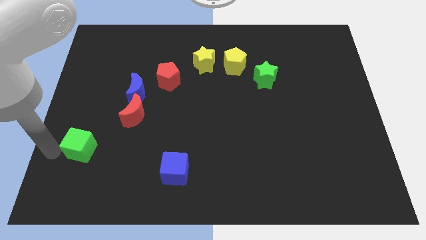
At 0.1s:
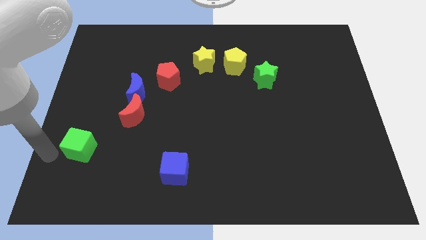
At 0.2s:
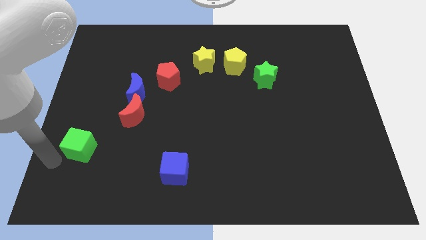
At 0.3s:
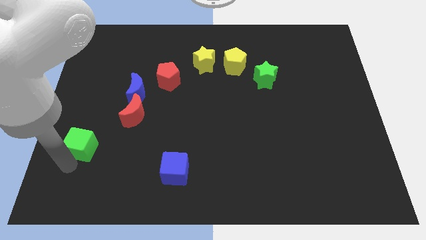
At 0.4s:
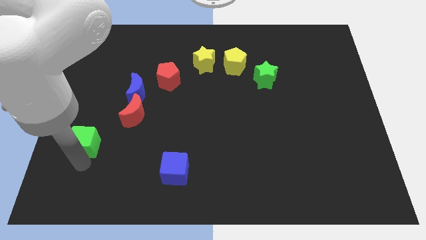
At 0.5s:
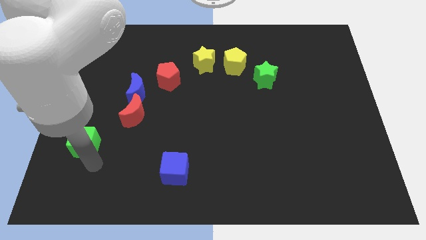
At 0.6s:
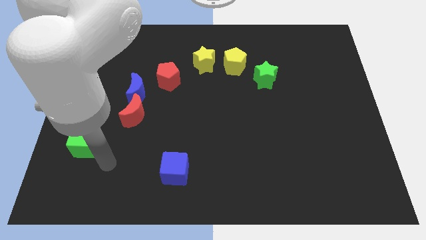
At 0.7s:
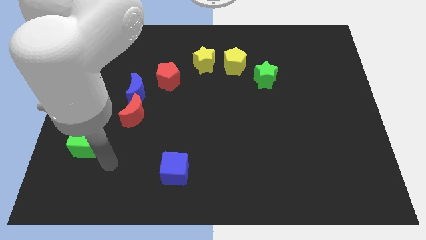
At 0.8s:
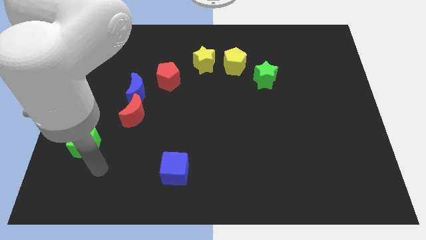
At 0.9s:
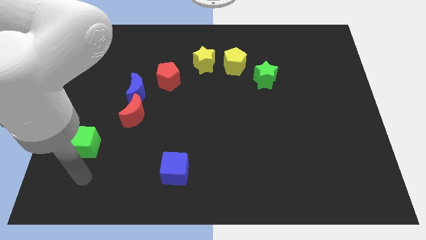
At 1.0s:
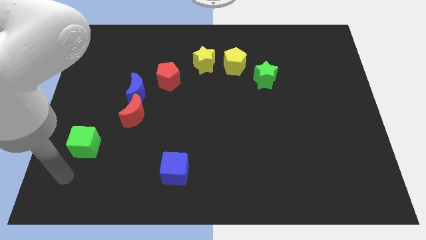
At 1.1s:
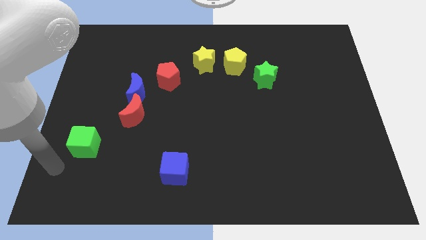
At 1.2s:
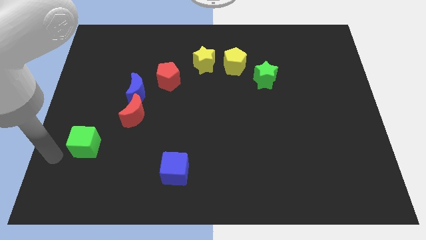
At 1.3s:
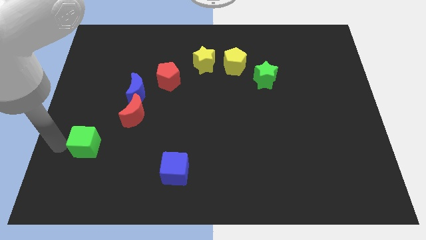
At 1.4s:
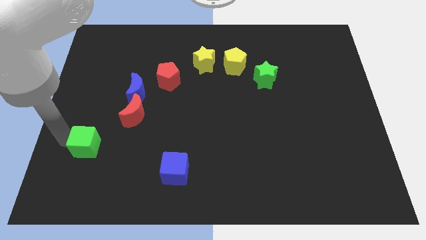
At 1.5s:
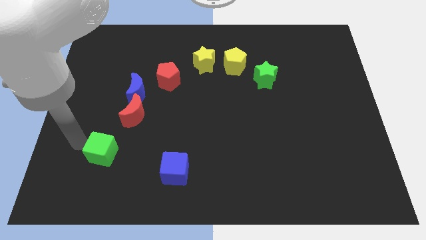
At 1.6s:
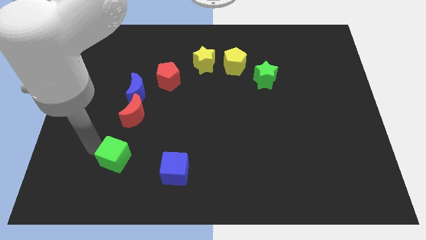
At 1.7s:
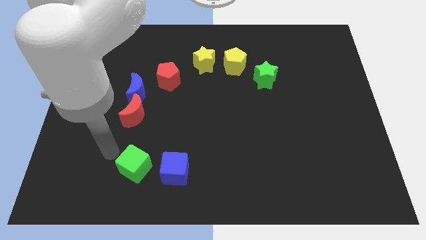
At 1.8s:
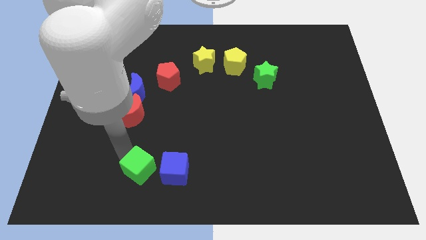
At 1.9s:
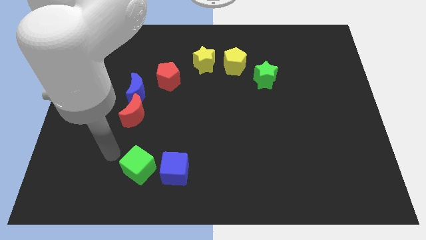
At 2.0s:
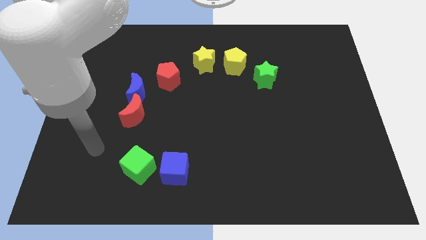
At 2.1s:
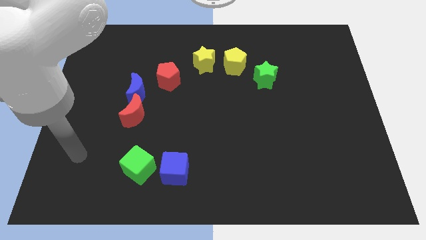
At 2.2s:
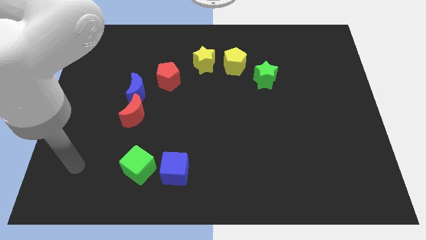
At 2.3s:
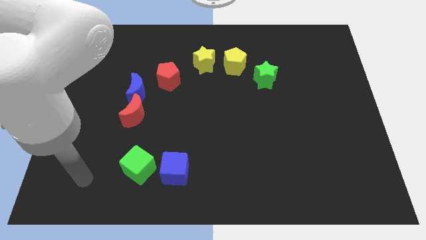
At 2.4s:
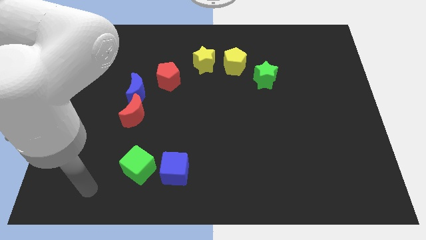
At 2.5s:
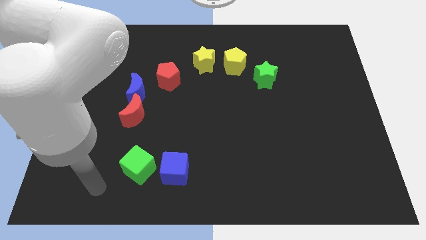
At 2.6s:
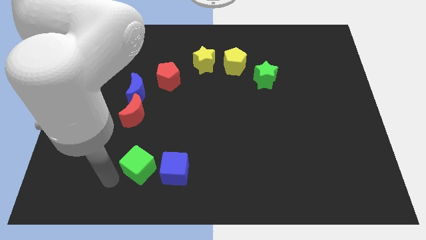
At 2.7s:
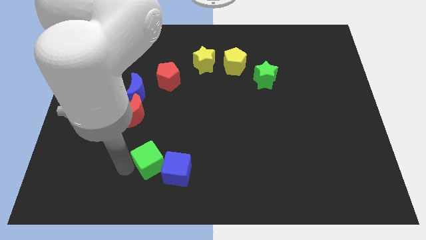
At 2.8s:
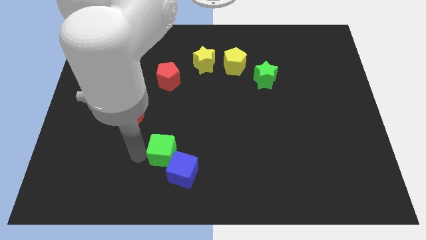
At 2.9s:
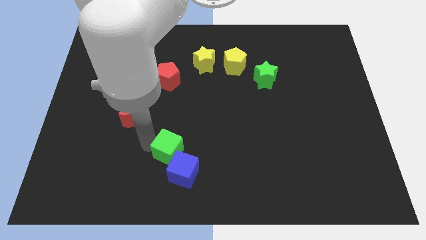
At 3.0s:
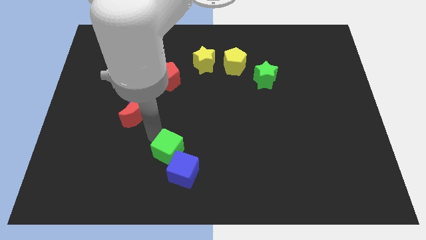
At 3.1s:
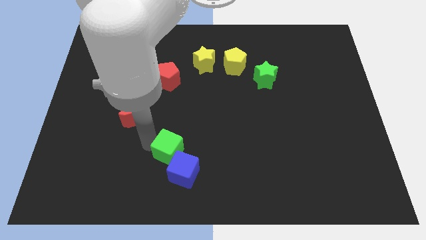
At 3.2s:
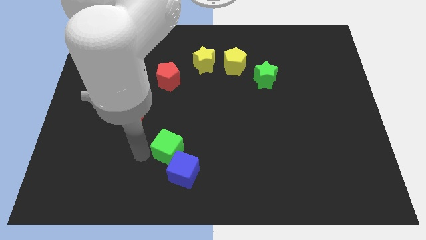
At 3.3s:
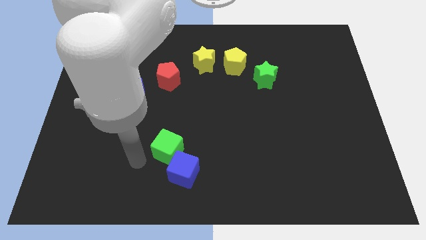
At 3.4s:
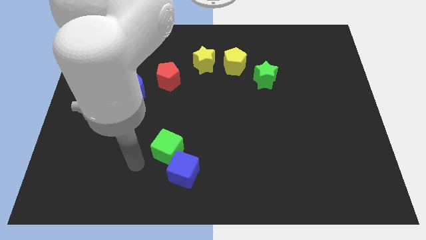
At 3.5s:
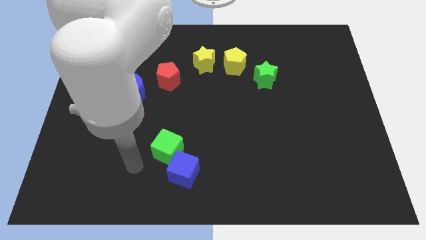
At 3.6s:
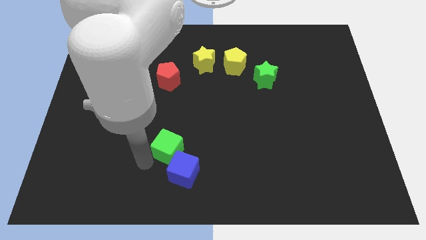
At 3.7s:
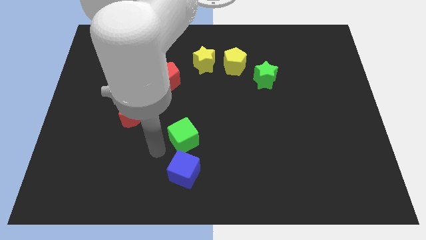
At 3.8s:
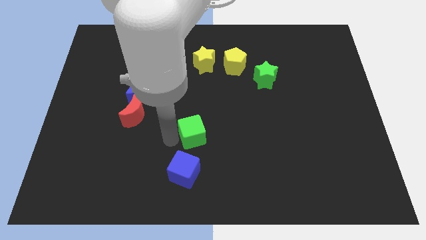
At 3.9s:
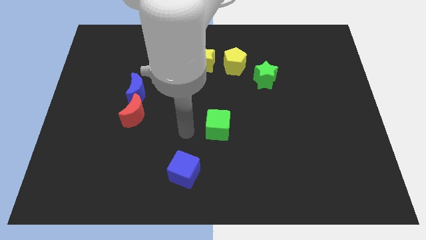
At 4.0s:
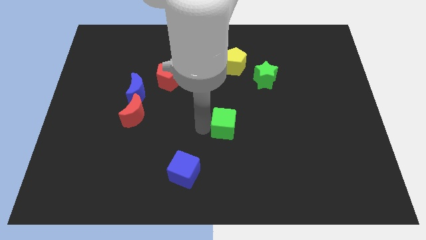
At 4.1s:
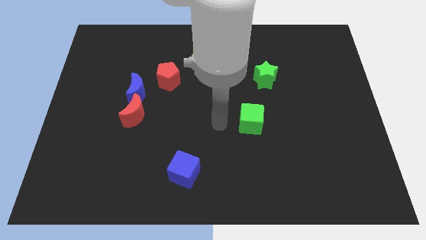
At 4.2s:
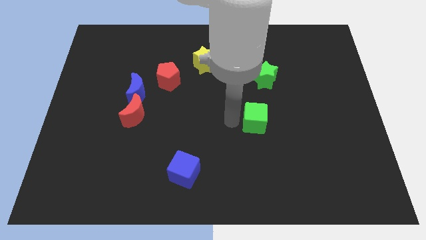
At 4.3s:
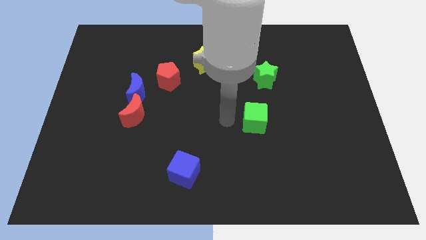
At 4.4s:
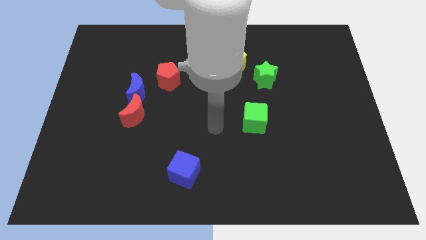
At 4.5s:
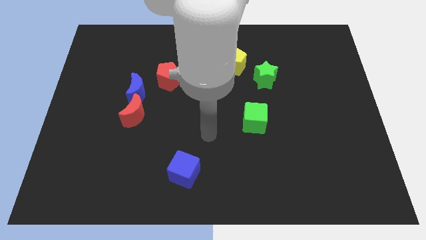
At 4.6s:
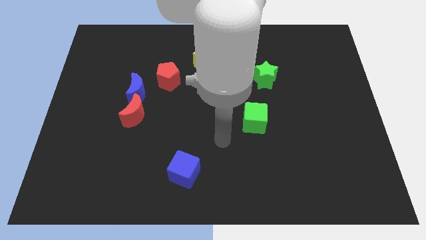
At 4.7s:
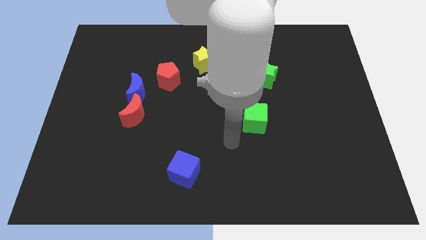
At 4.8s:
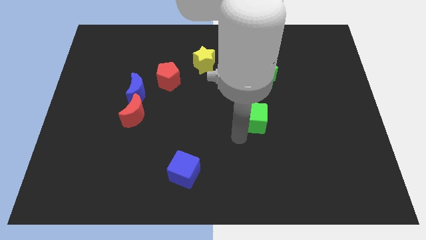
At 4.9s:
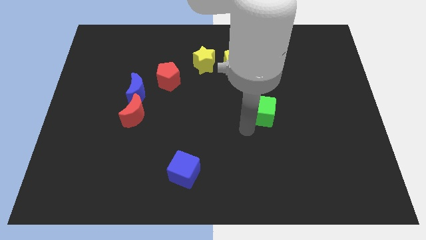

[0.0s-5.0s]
place green cube to the bottom of green star

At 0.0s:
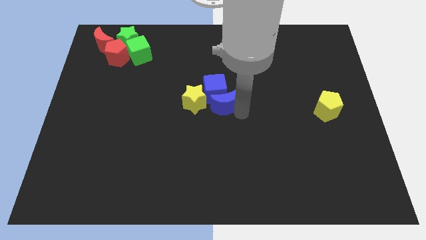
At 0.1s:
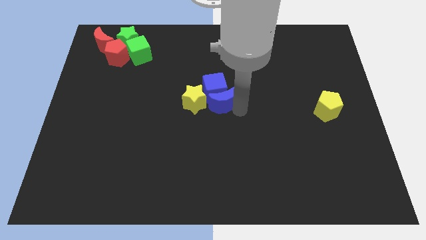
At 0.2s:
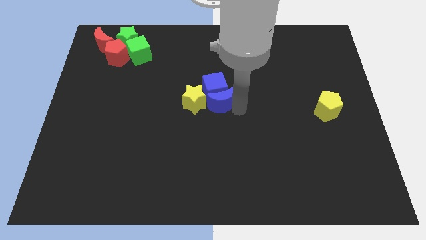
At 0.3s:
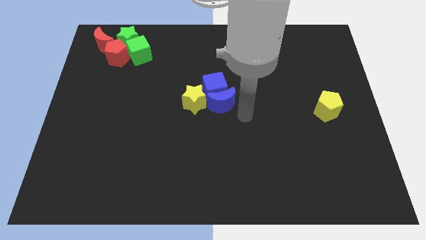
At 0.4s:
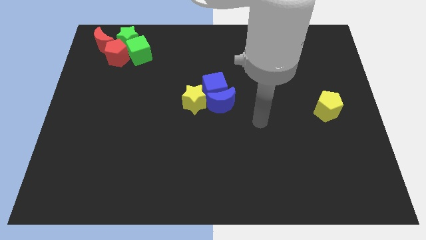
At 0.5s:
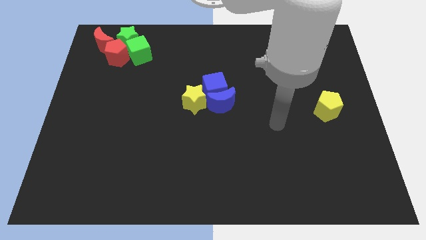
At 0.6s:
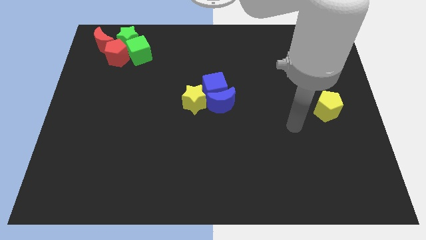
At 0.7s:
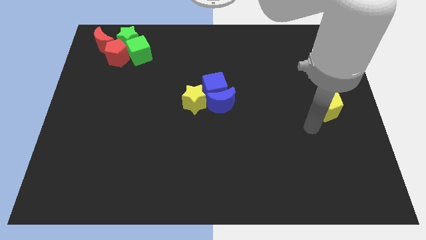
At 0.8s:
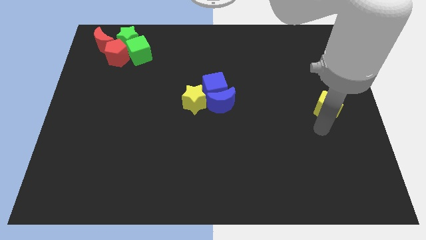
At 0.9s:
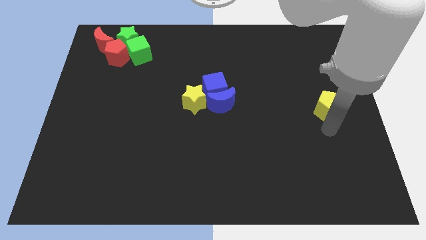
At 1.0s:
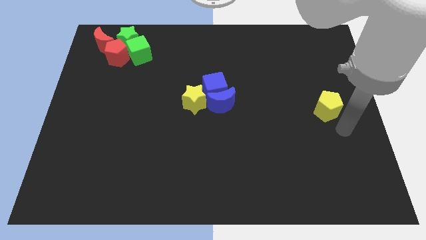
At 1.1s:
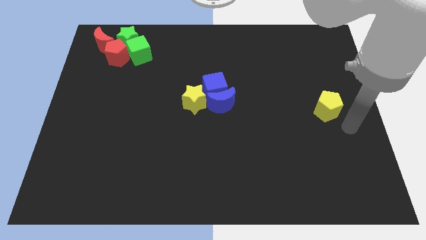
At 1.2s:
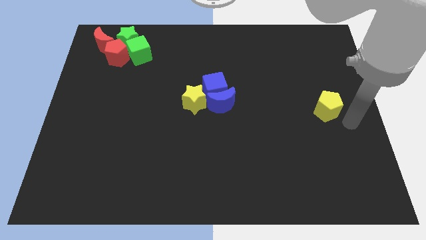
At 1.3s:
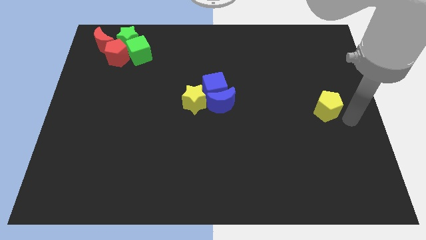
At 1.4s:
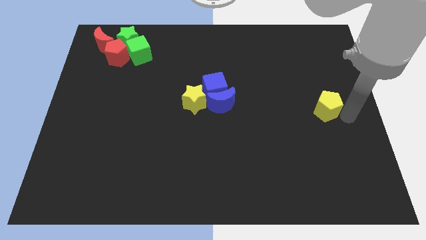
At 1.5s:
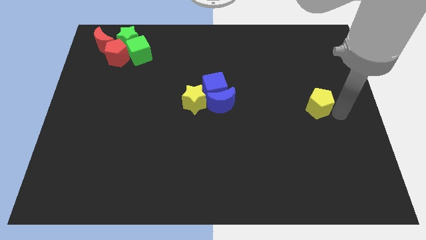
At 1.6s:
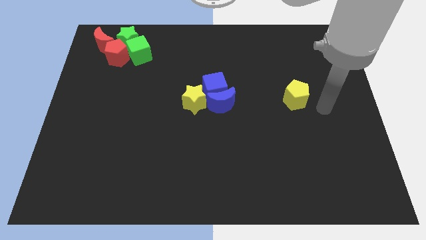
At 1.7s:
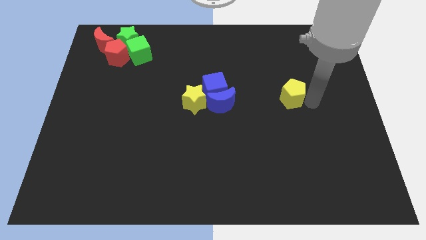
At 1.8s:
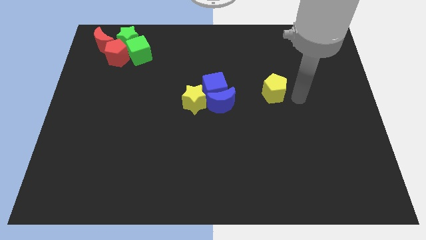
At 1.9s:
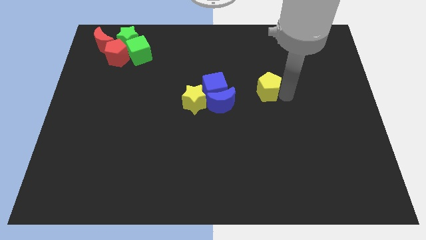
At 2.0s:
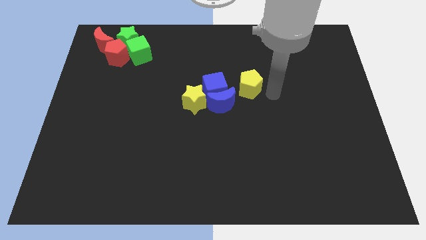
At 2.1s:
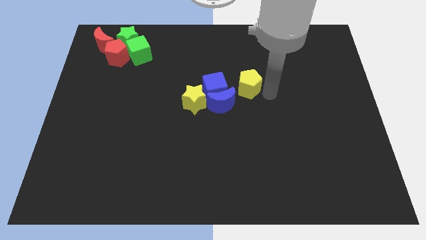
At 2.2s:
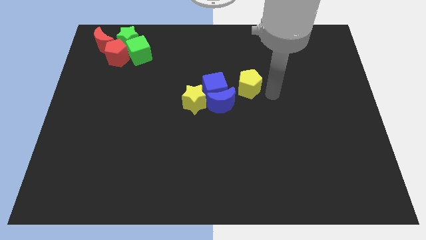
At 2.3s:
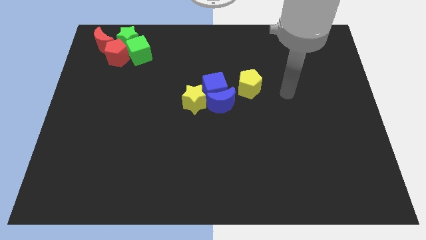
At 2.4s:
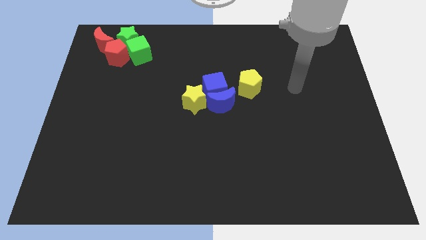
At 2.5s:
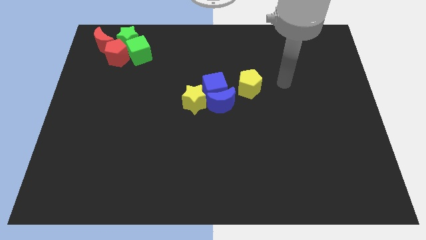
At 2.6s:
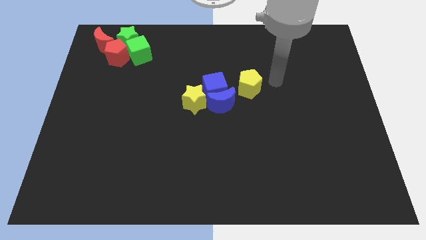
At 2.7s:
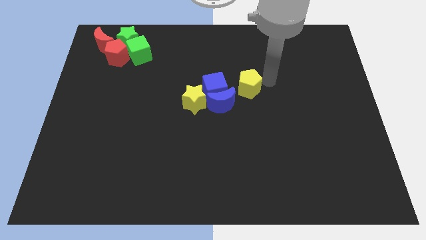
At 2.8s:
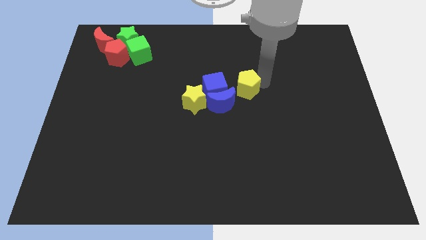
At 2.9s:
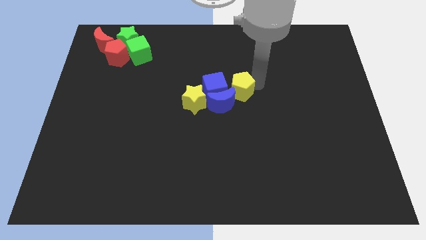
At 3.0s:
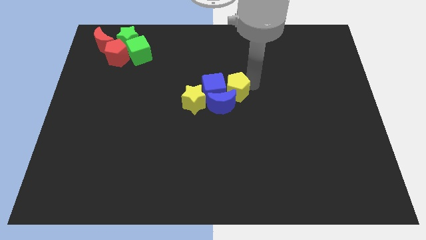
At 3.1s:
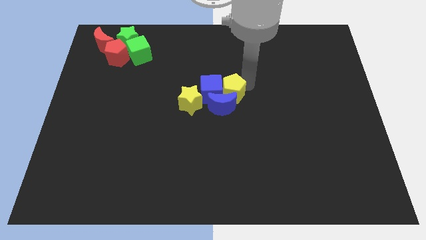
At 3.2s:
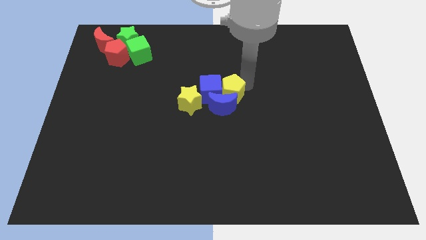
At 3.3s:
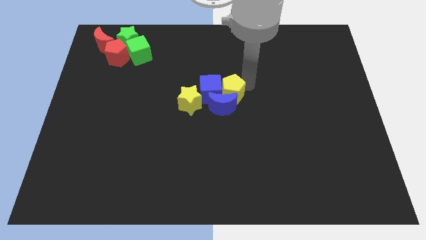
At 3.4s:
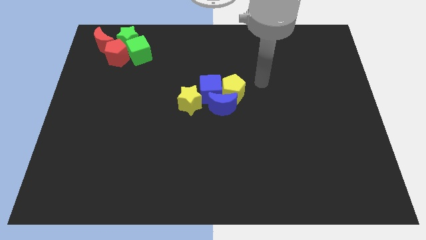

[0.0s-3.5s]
push the yellow pentagon into a group of blocks at centre of the board

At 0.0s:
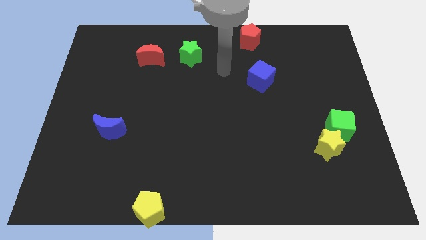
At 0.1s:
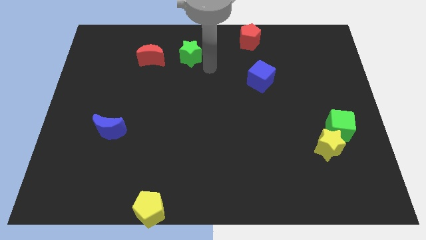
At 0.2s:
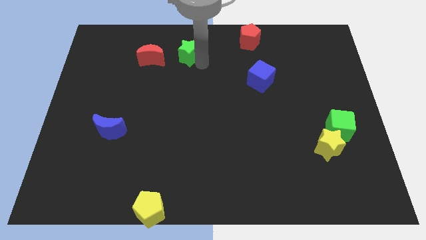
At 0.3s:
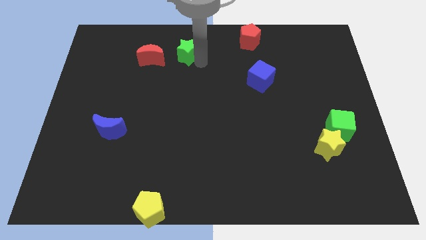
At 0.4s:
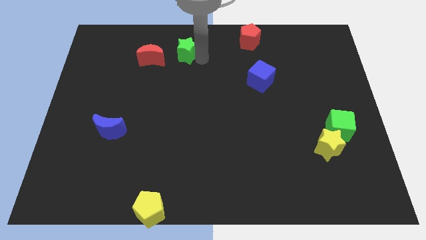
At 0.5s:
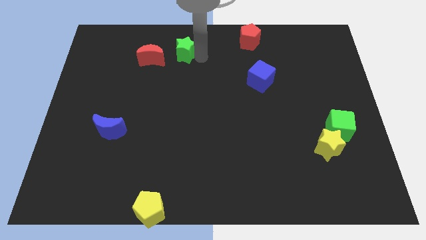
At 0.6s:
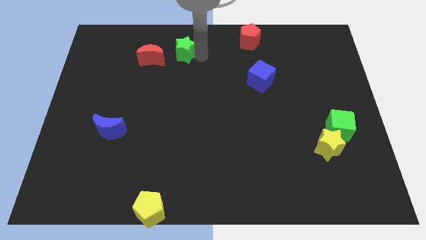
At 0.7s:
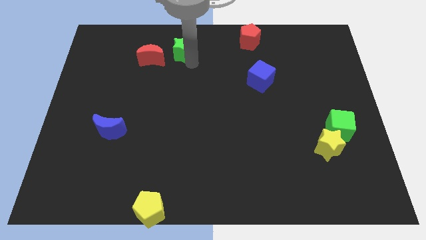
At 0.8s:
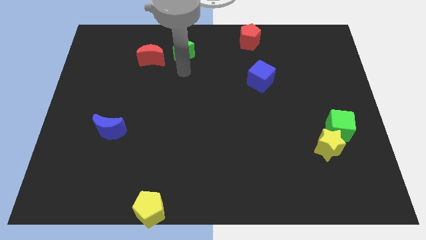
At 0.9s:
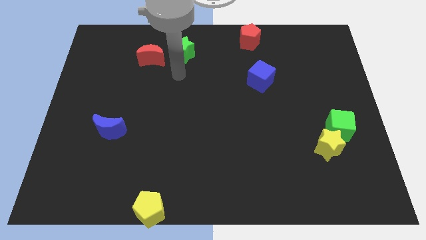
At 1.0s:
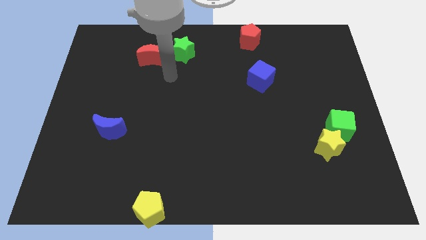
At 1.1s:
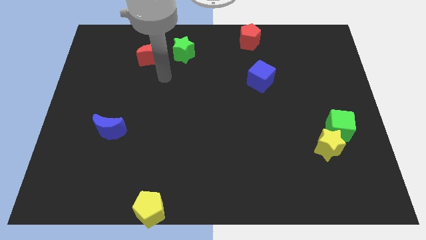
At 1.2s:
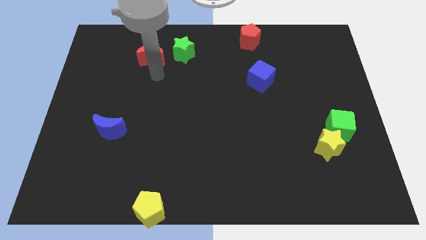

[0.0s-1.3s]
slightly push the green star near to the red moon
